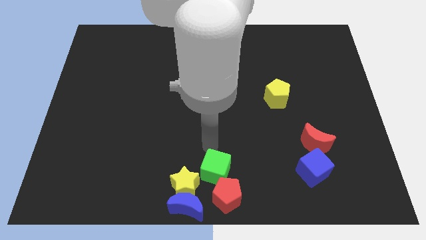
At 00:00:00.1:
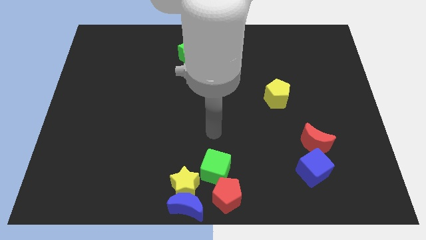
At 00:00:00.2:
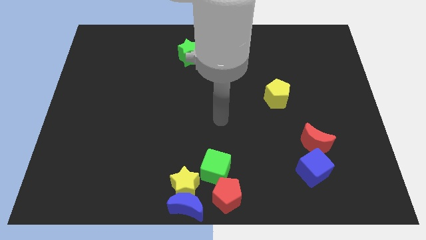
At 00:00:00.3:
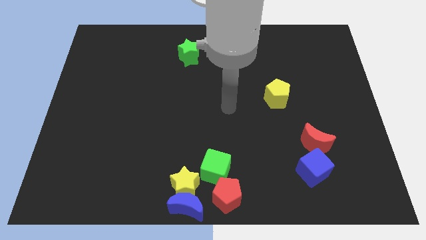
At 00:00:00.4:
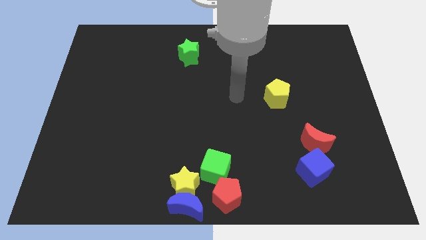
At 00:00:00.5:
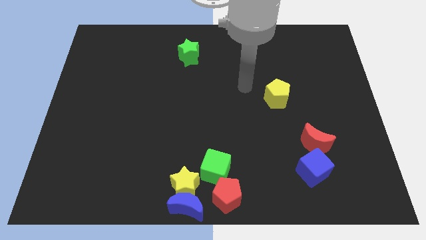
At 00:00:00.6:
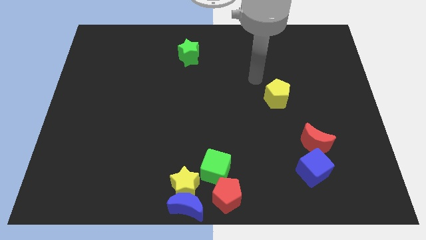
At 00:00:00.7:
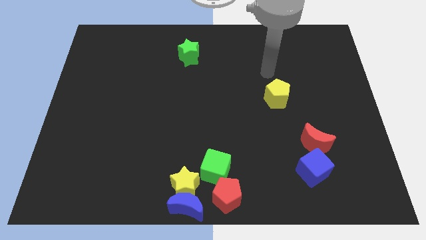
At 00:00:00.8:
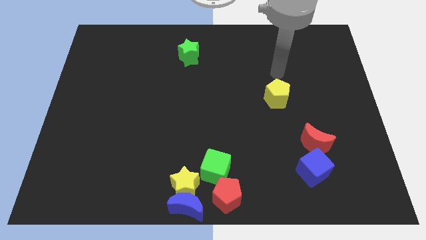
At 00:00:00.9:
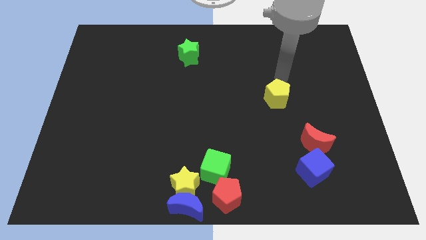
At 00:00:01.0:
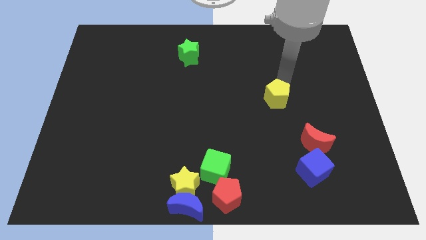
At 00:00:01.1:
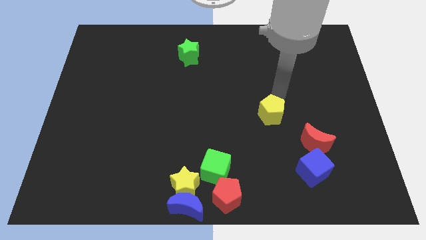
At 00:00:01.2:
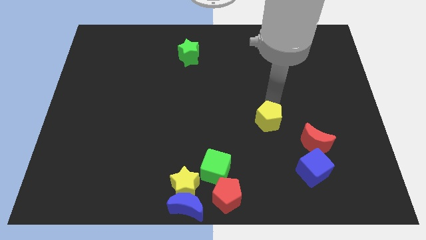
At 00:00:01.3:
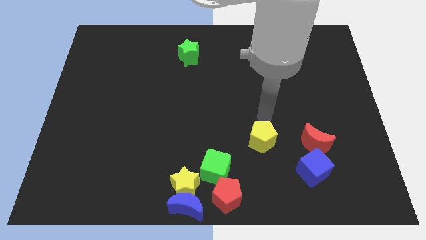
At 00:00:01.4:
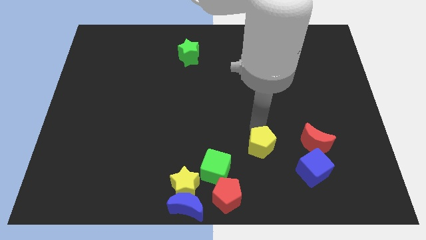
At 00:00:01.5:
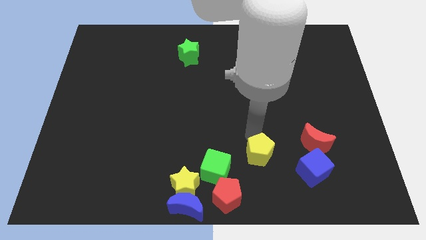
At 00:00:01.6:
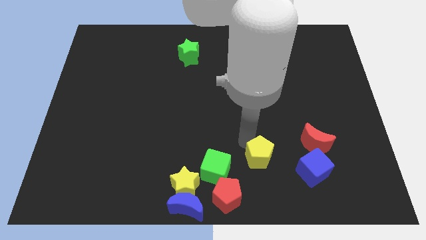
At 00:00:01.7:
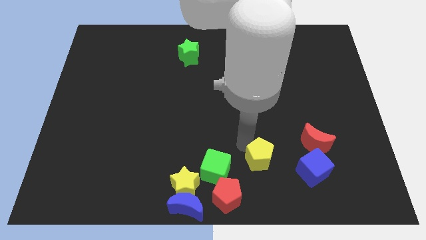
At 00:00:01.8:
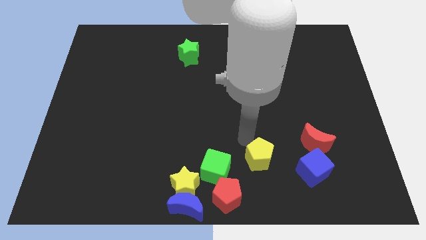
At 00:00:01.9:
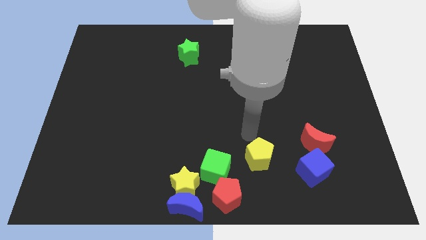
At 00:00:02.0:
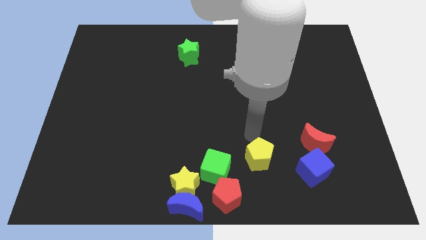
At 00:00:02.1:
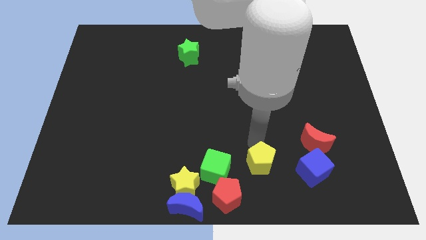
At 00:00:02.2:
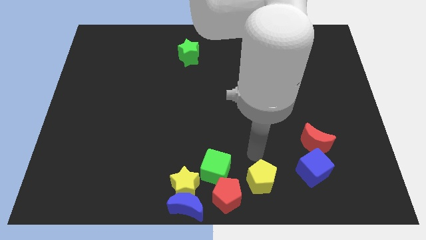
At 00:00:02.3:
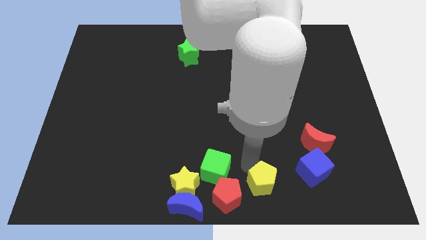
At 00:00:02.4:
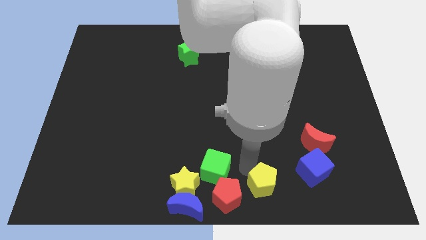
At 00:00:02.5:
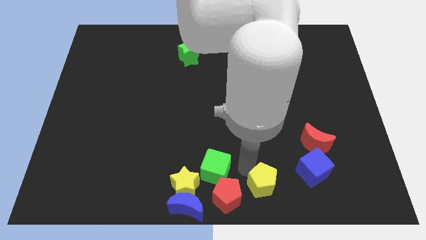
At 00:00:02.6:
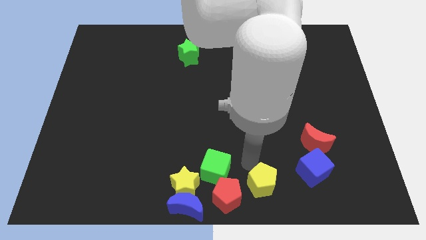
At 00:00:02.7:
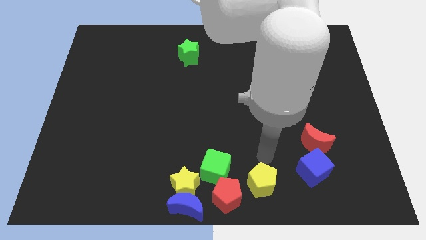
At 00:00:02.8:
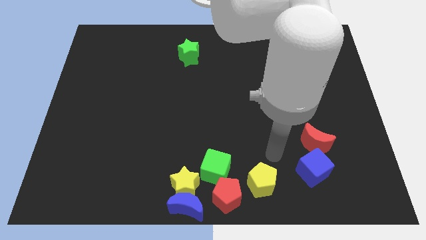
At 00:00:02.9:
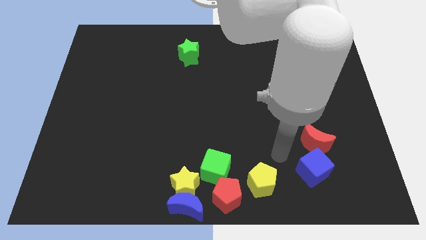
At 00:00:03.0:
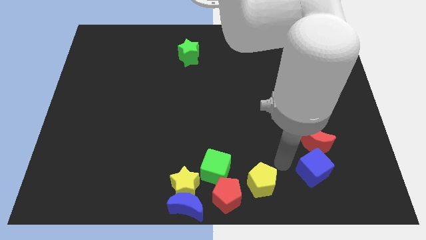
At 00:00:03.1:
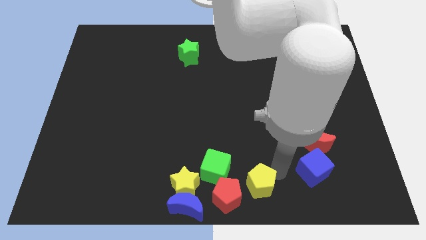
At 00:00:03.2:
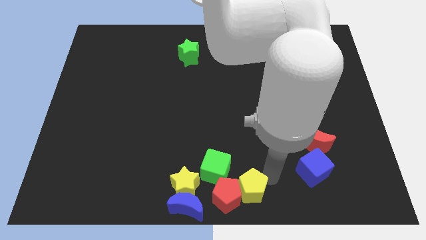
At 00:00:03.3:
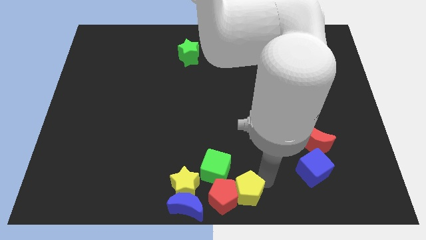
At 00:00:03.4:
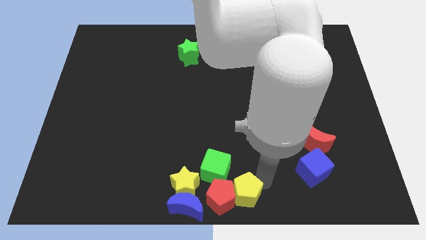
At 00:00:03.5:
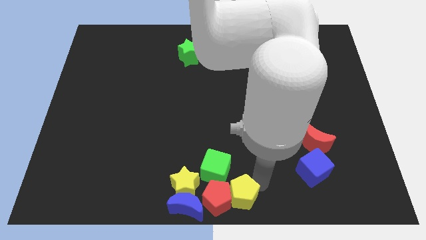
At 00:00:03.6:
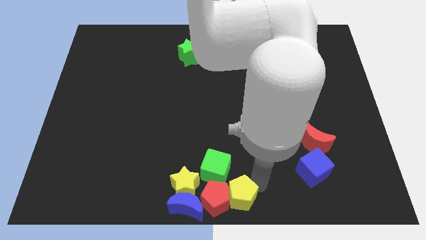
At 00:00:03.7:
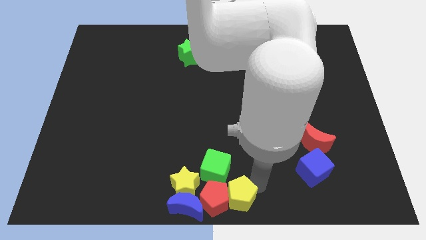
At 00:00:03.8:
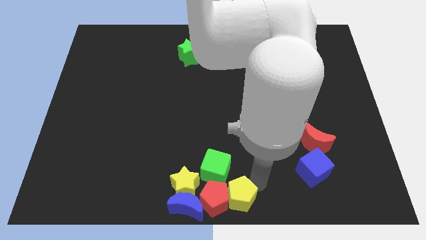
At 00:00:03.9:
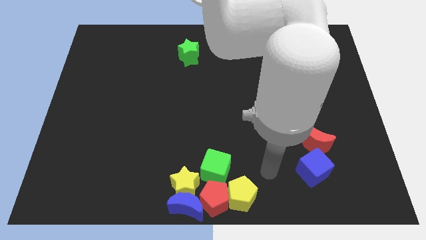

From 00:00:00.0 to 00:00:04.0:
push the yellow pentagon into the red pentagon

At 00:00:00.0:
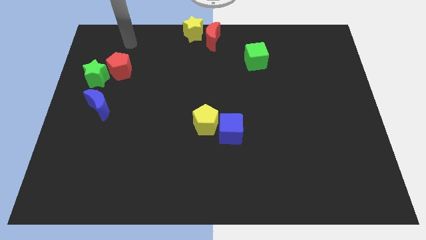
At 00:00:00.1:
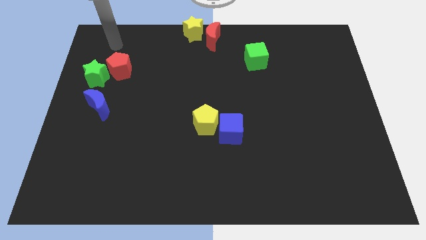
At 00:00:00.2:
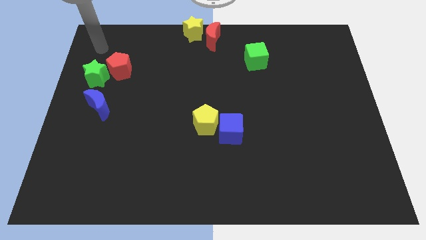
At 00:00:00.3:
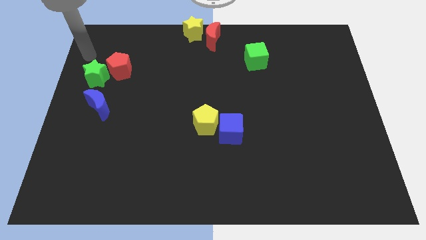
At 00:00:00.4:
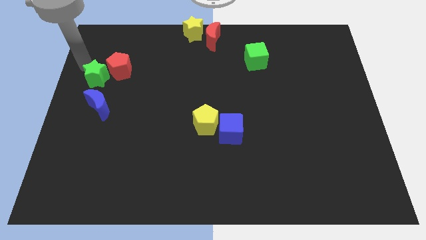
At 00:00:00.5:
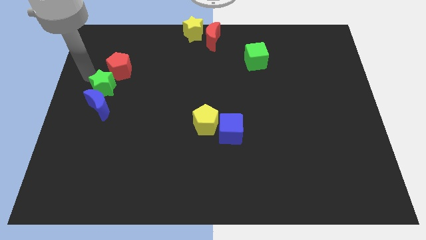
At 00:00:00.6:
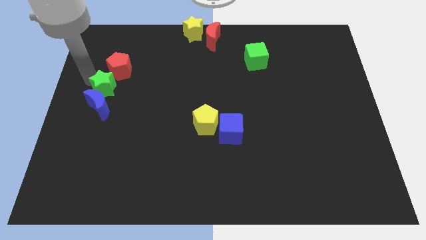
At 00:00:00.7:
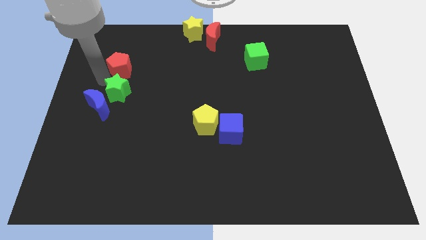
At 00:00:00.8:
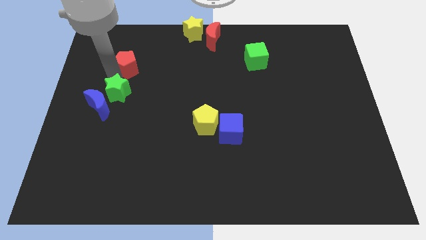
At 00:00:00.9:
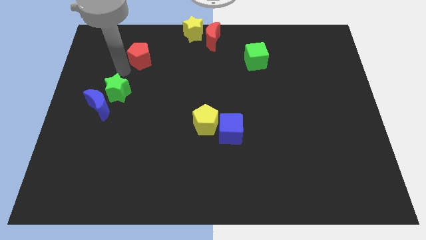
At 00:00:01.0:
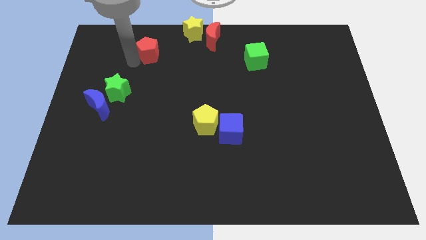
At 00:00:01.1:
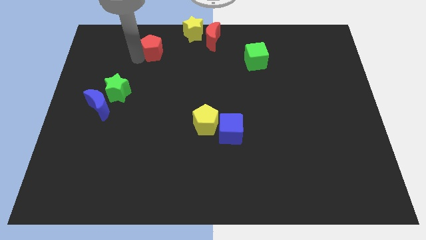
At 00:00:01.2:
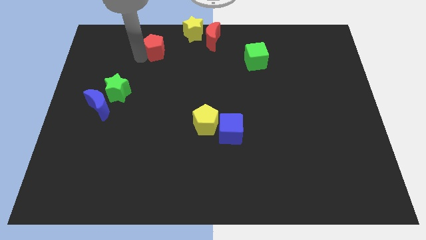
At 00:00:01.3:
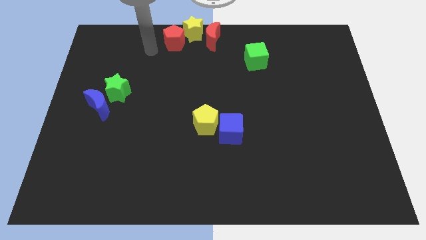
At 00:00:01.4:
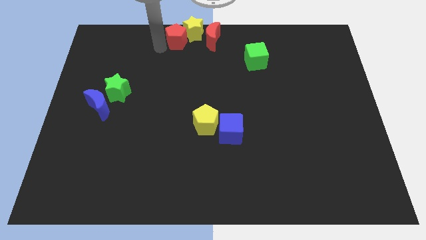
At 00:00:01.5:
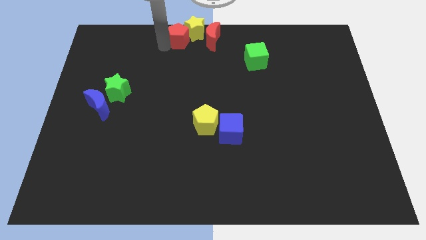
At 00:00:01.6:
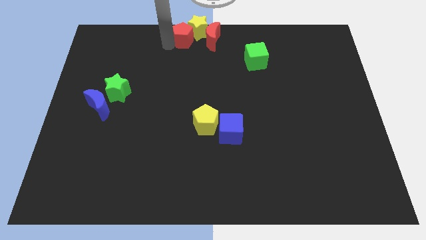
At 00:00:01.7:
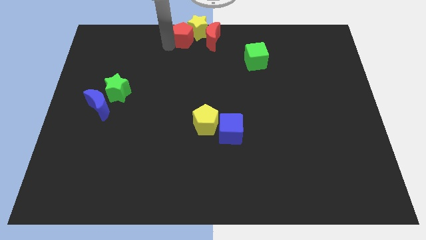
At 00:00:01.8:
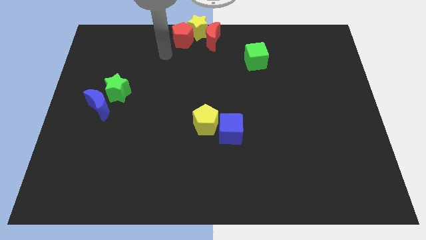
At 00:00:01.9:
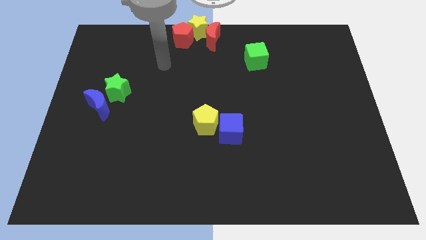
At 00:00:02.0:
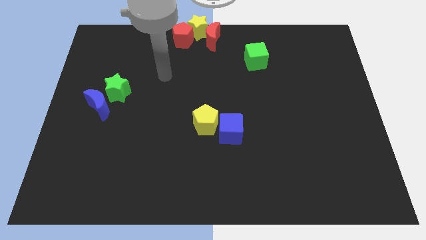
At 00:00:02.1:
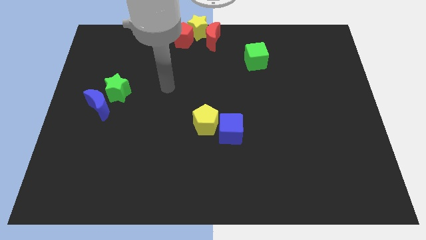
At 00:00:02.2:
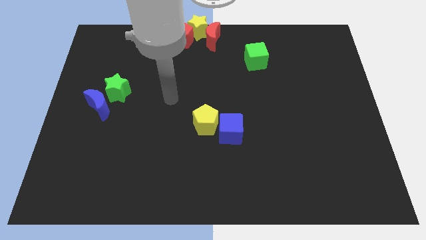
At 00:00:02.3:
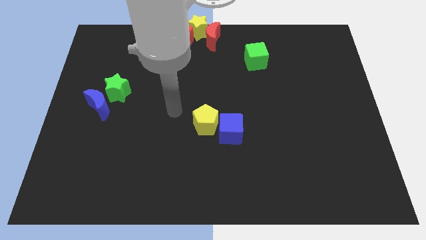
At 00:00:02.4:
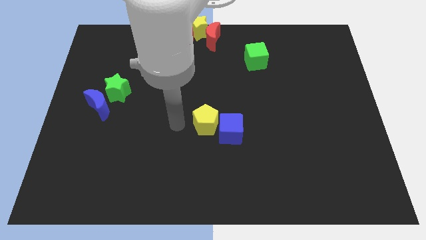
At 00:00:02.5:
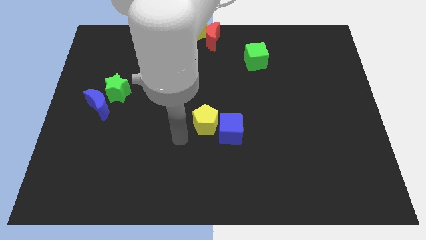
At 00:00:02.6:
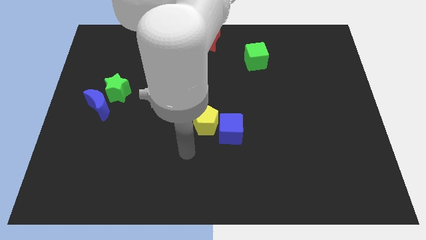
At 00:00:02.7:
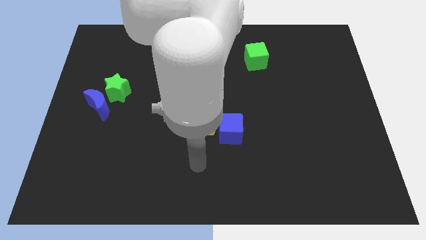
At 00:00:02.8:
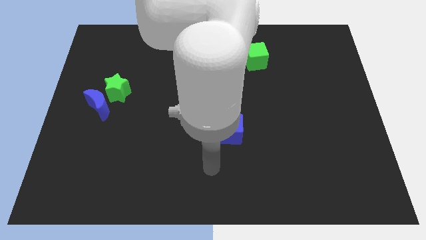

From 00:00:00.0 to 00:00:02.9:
push the red pentagon into the yellow star

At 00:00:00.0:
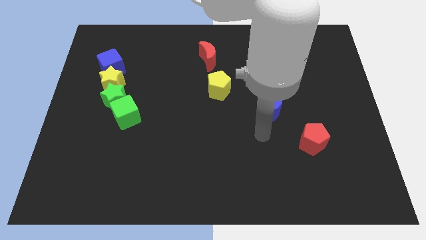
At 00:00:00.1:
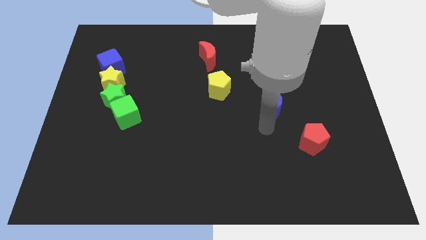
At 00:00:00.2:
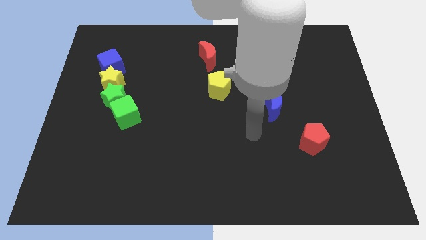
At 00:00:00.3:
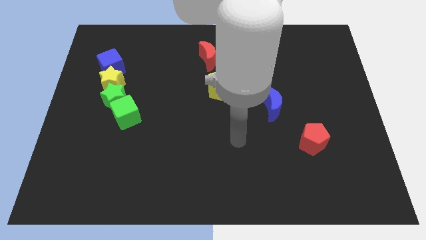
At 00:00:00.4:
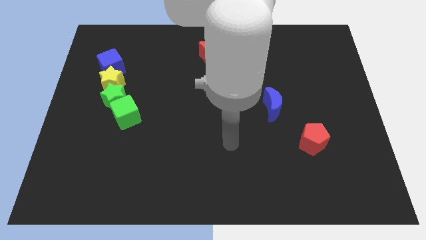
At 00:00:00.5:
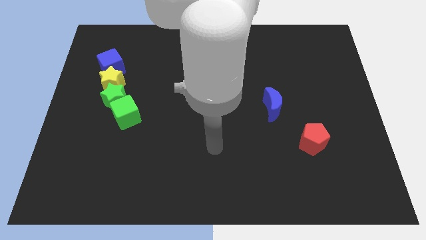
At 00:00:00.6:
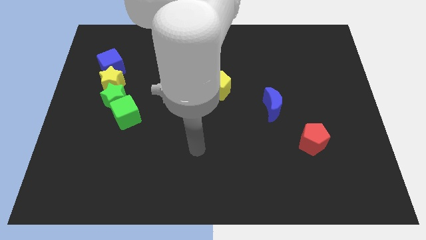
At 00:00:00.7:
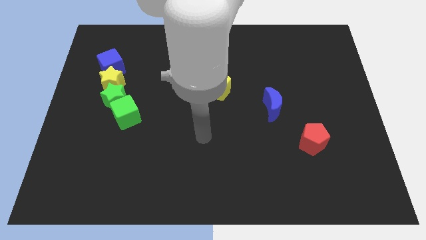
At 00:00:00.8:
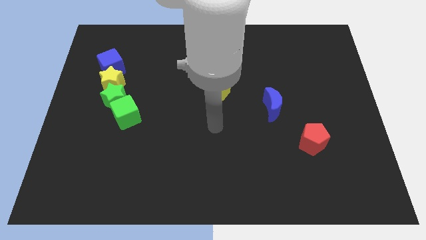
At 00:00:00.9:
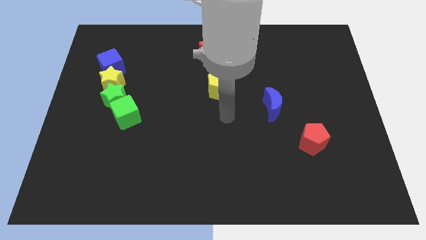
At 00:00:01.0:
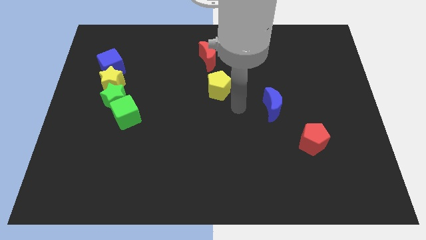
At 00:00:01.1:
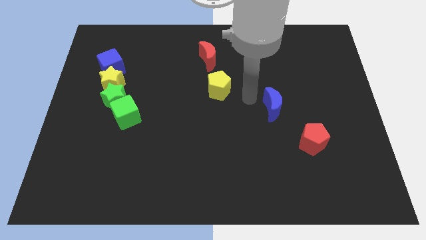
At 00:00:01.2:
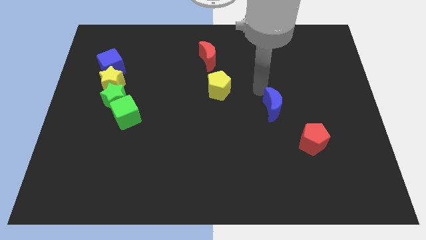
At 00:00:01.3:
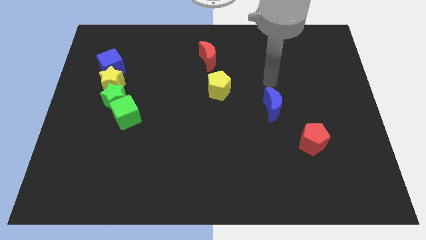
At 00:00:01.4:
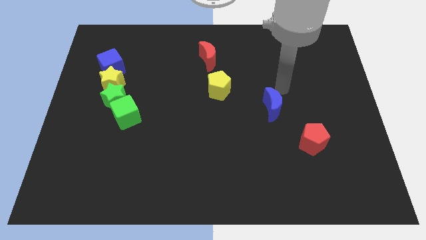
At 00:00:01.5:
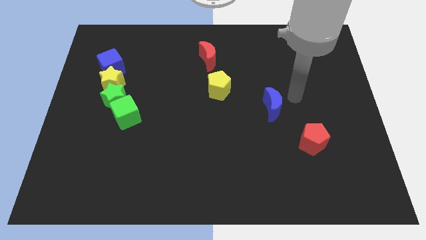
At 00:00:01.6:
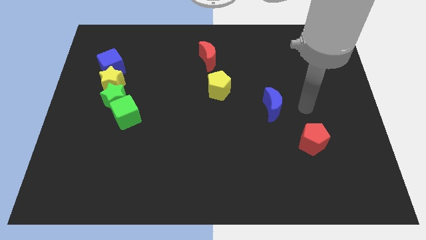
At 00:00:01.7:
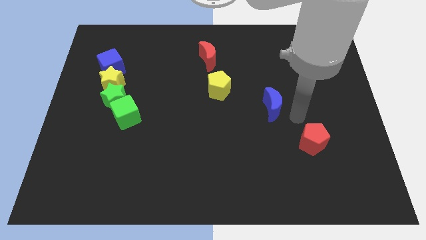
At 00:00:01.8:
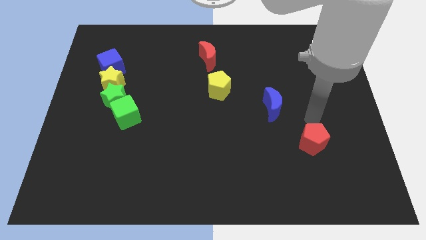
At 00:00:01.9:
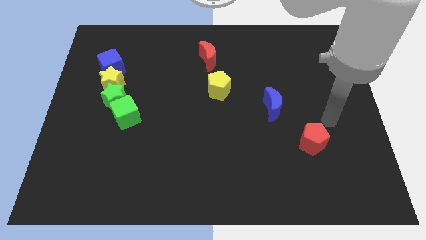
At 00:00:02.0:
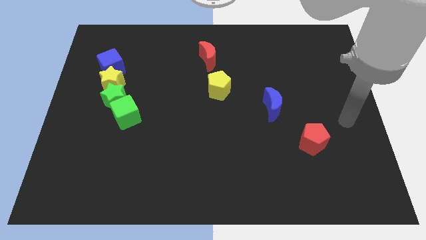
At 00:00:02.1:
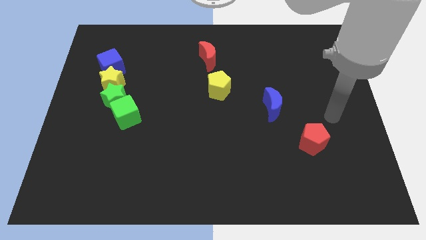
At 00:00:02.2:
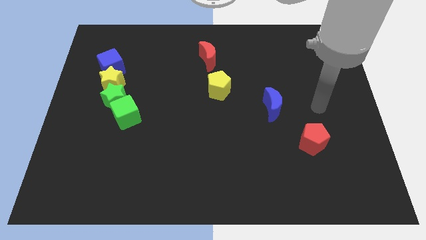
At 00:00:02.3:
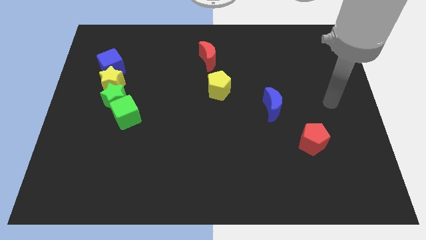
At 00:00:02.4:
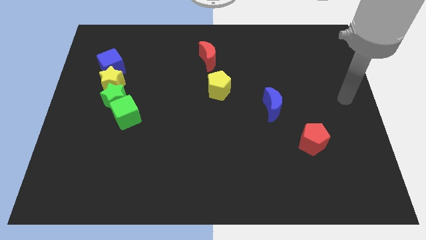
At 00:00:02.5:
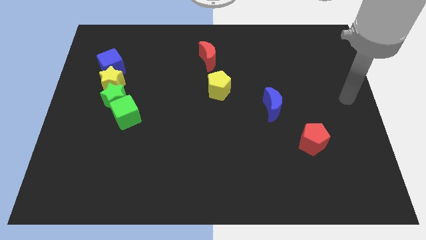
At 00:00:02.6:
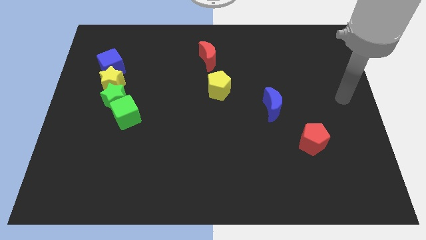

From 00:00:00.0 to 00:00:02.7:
move the arm in between blue crescent and red pentagon
